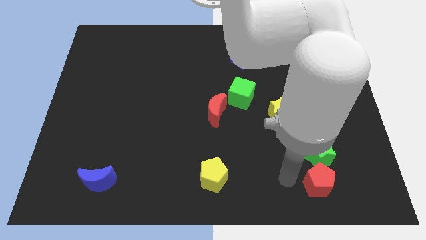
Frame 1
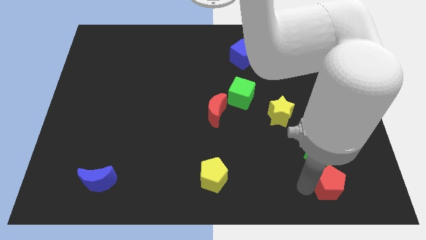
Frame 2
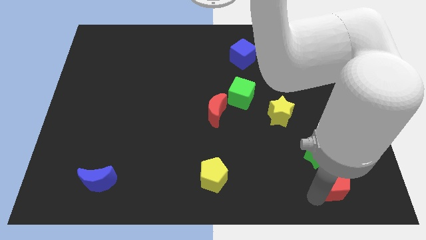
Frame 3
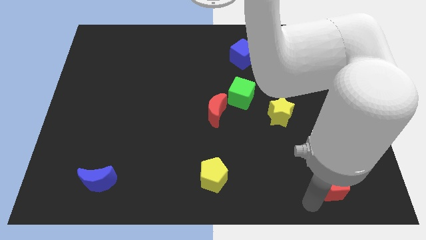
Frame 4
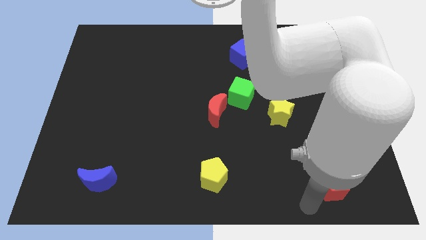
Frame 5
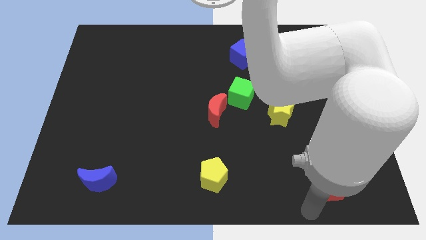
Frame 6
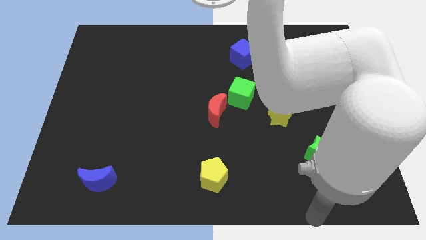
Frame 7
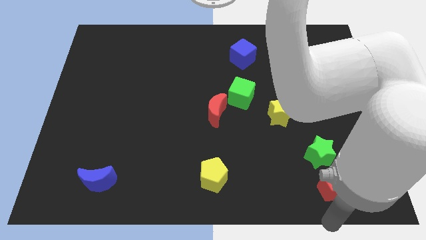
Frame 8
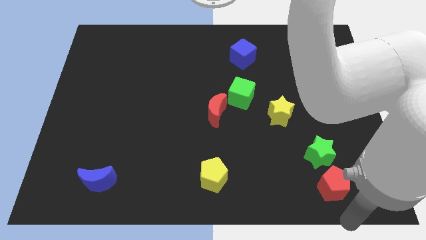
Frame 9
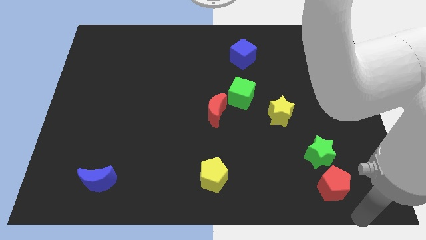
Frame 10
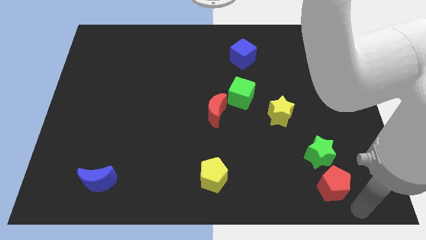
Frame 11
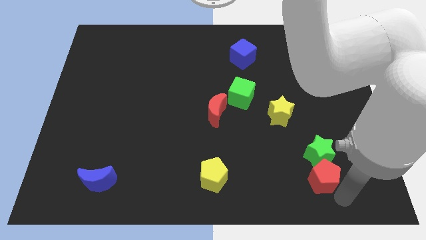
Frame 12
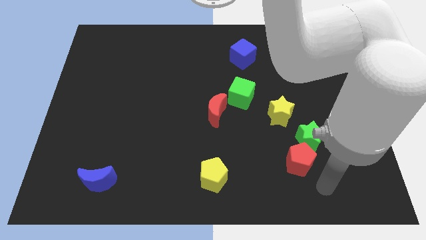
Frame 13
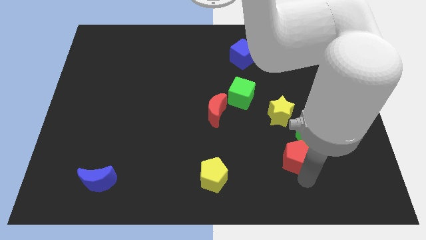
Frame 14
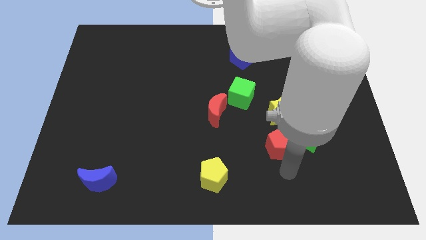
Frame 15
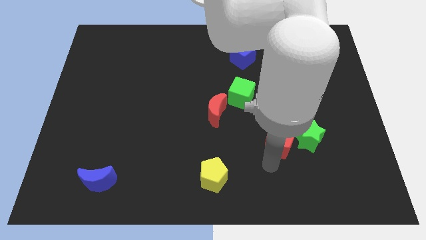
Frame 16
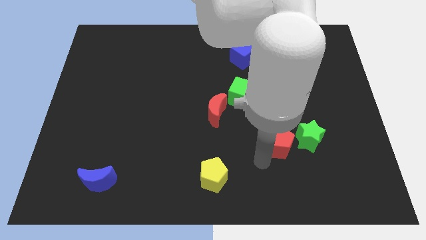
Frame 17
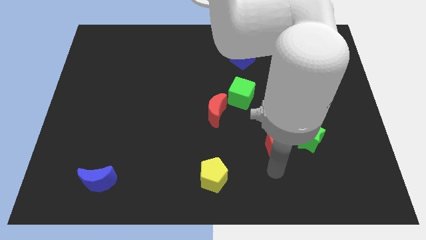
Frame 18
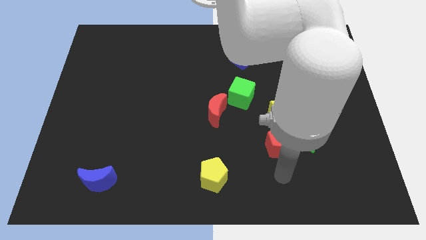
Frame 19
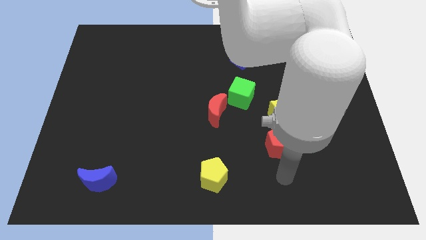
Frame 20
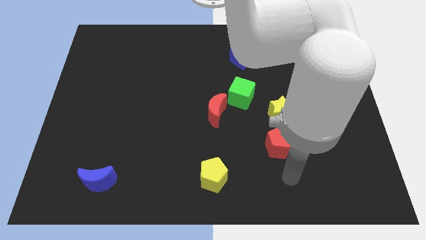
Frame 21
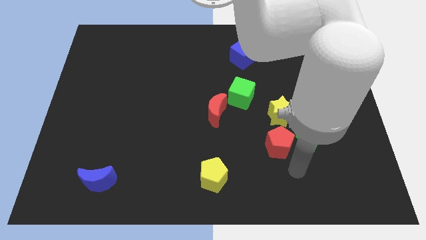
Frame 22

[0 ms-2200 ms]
move the red pentagon to the left side of the yellow star

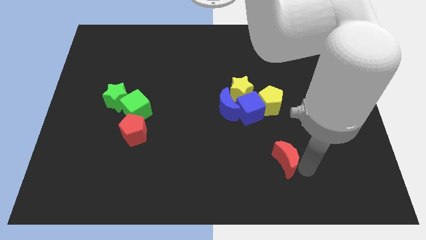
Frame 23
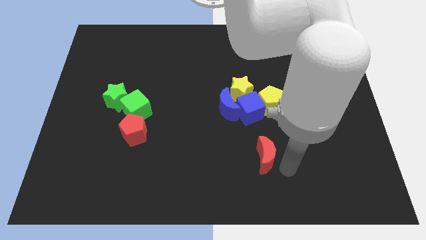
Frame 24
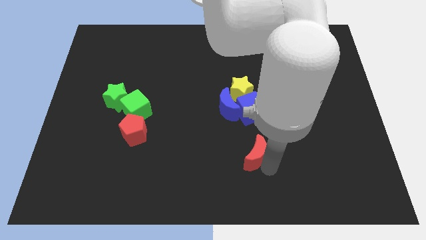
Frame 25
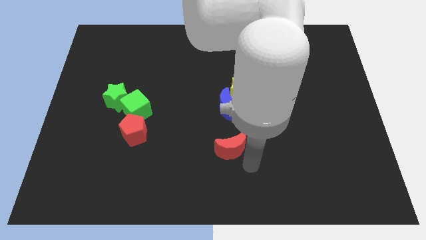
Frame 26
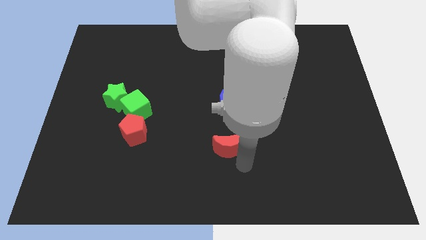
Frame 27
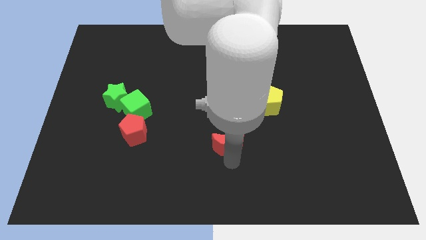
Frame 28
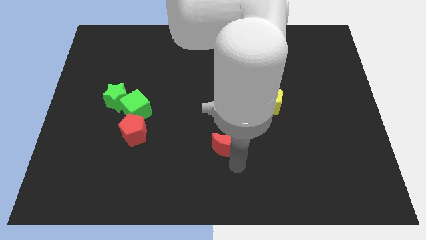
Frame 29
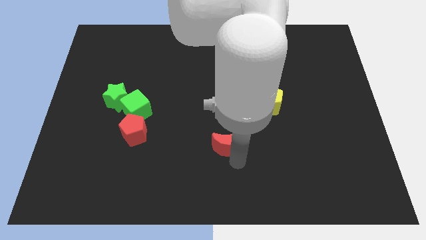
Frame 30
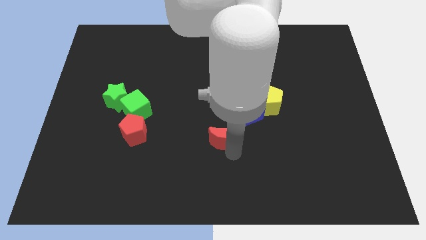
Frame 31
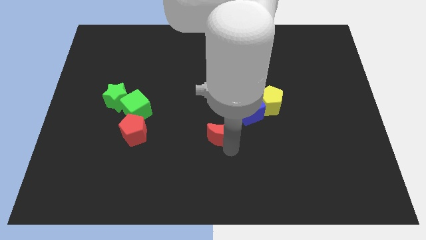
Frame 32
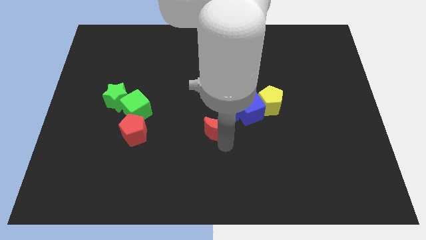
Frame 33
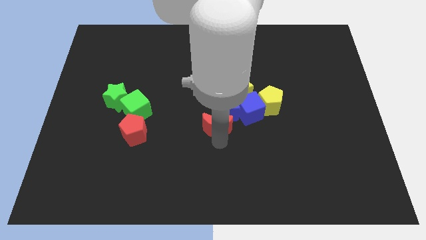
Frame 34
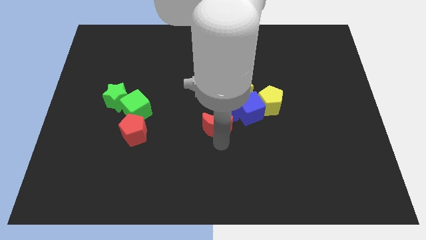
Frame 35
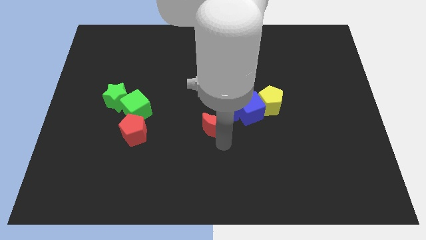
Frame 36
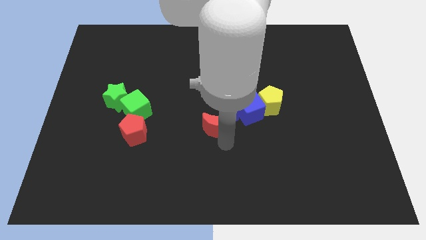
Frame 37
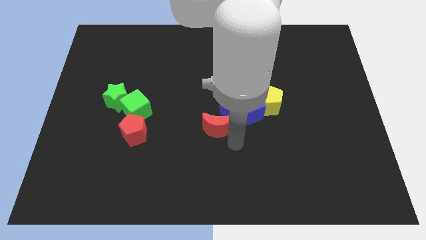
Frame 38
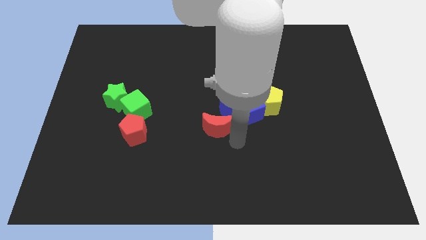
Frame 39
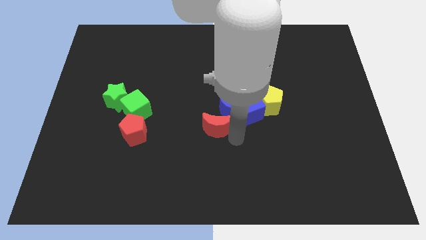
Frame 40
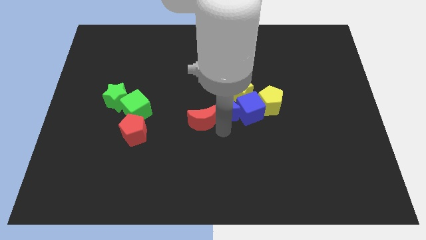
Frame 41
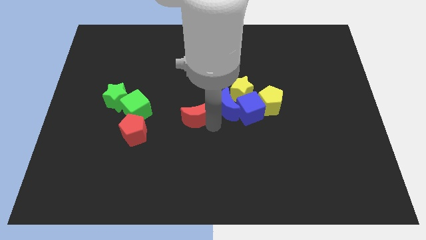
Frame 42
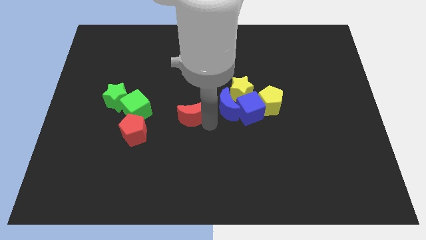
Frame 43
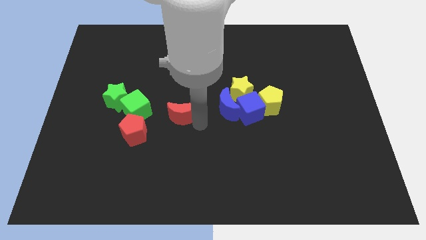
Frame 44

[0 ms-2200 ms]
move the red moon to the right side of the green cube

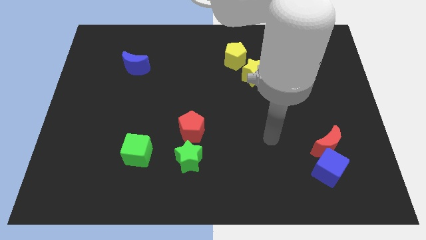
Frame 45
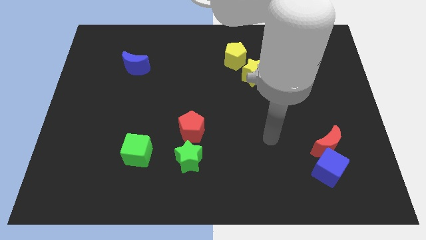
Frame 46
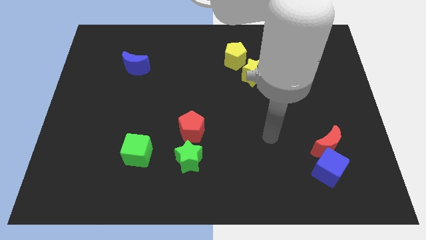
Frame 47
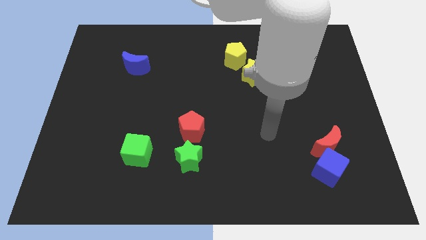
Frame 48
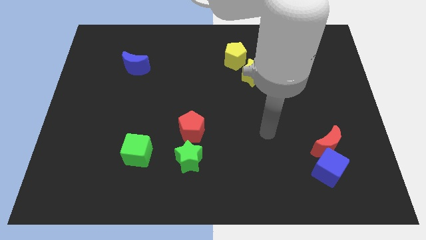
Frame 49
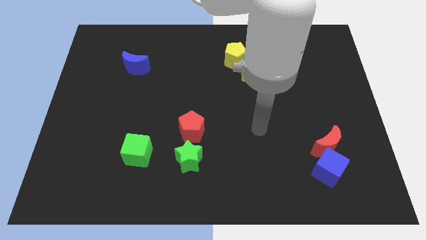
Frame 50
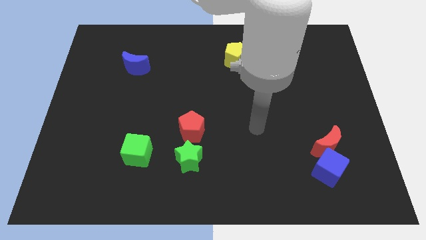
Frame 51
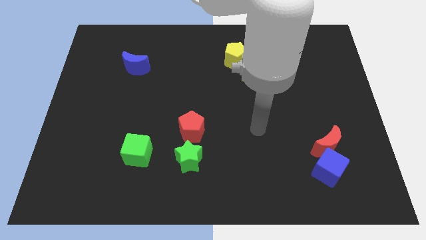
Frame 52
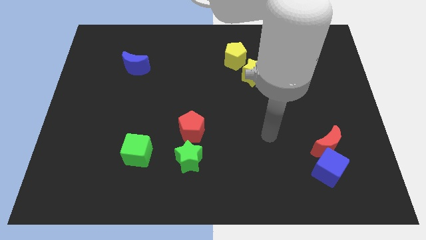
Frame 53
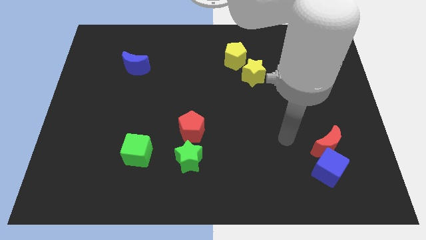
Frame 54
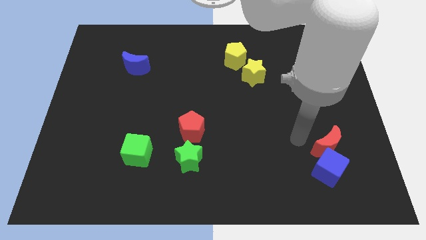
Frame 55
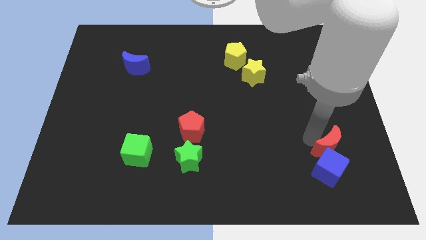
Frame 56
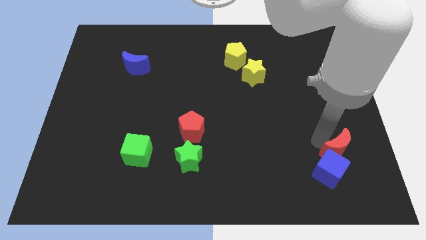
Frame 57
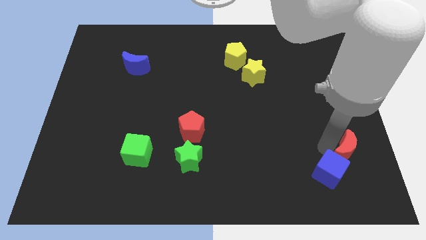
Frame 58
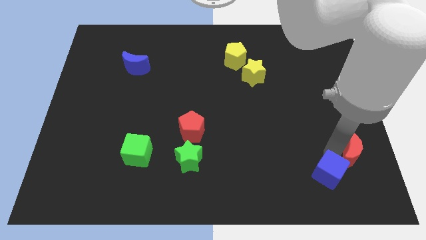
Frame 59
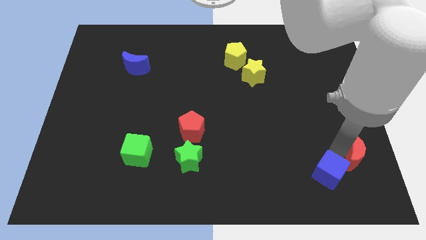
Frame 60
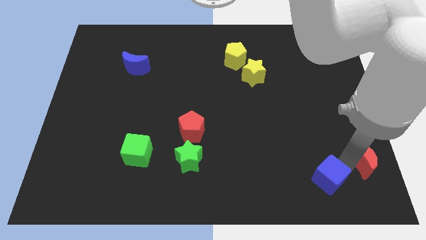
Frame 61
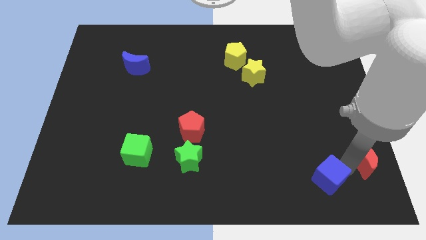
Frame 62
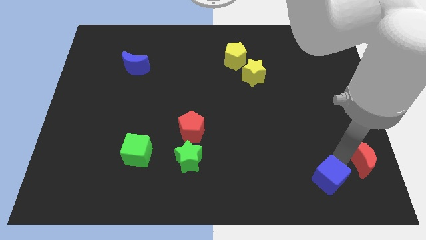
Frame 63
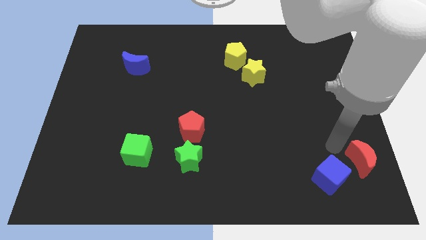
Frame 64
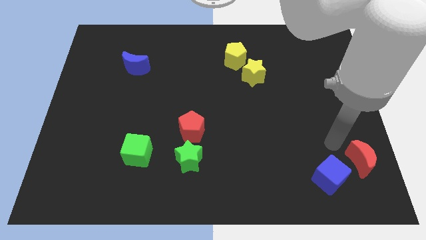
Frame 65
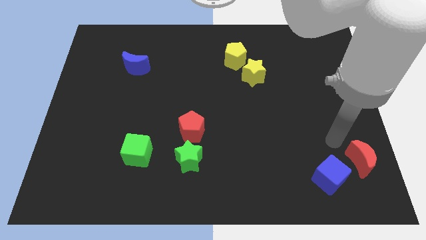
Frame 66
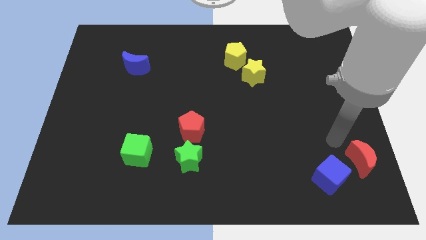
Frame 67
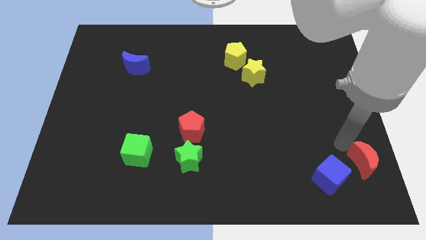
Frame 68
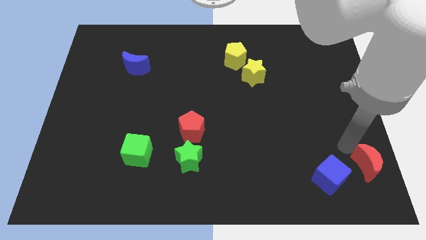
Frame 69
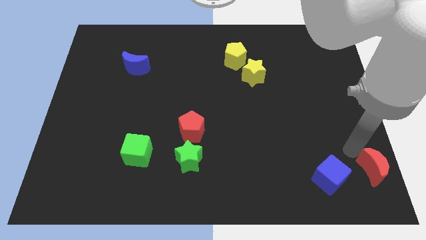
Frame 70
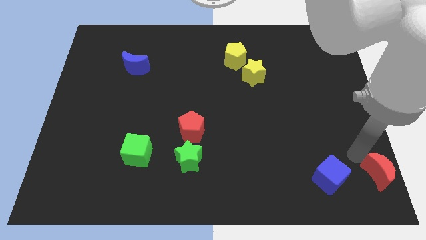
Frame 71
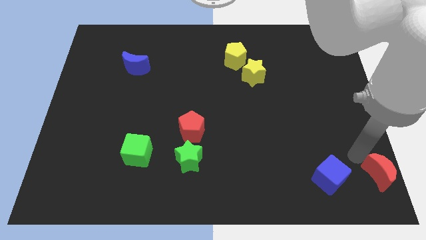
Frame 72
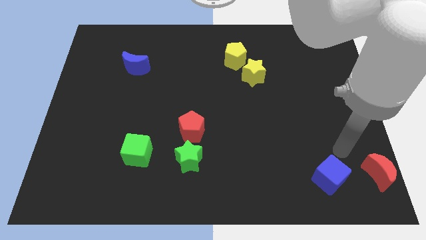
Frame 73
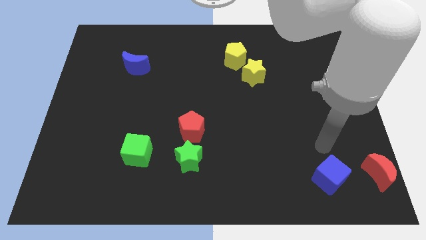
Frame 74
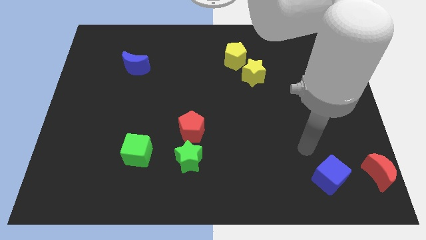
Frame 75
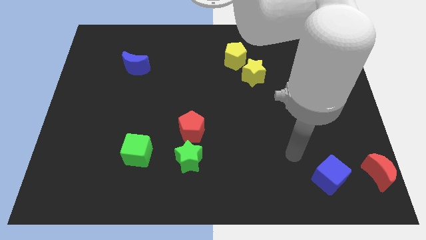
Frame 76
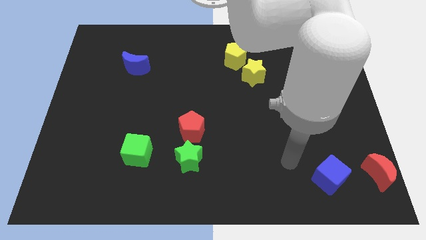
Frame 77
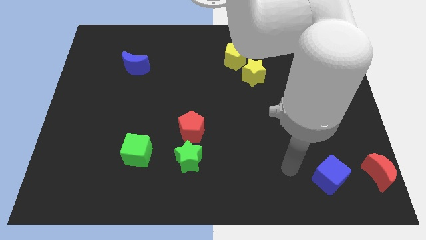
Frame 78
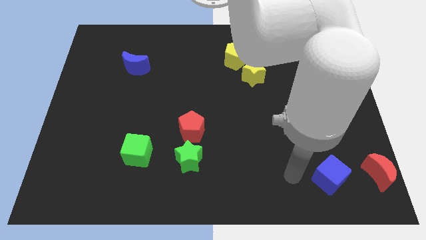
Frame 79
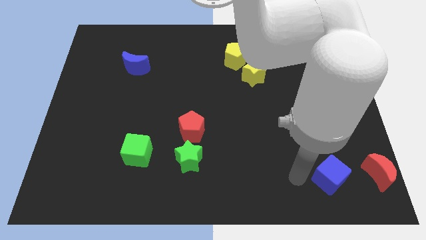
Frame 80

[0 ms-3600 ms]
move the red crescent to the bottom right of the board

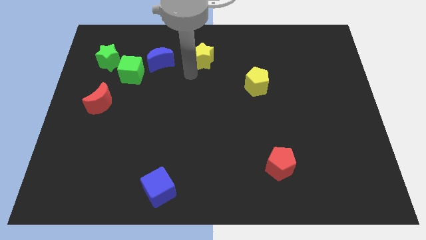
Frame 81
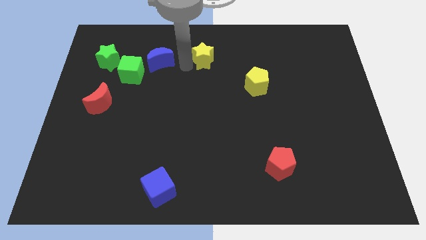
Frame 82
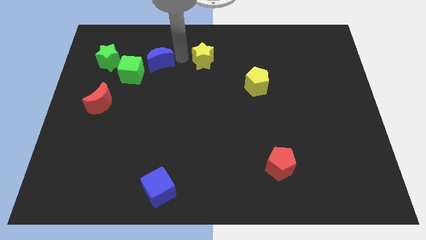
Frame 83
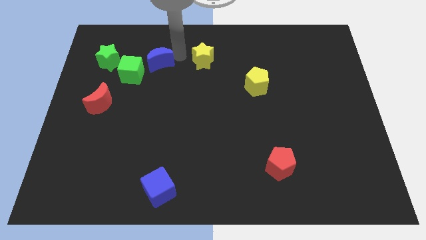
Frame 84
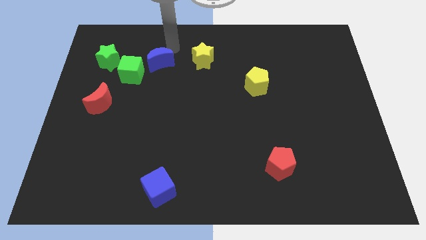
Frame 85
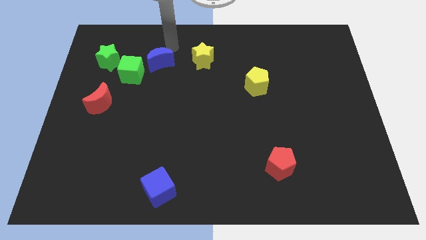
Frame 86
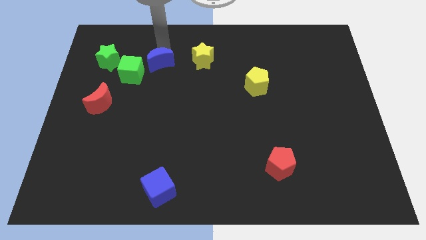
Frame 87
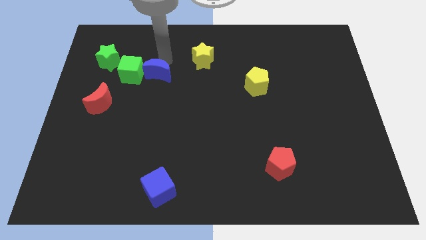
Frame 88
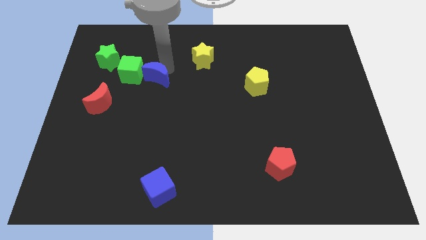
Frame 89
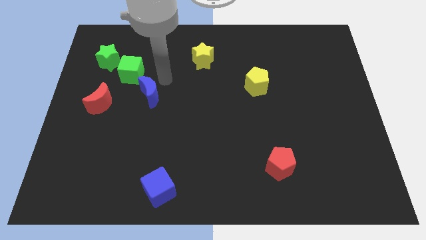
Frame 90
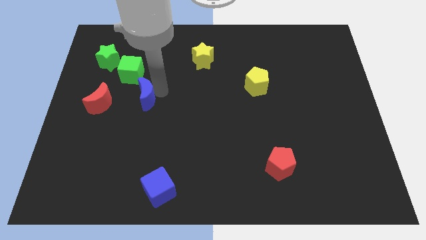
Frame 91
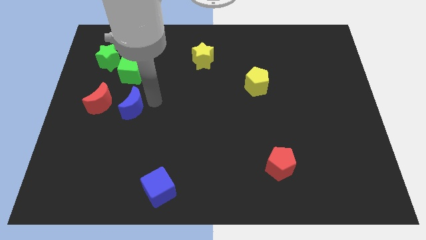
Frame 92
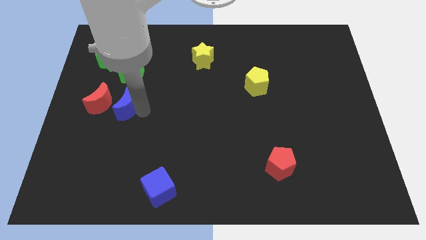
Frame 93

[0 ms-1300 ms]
move the blue crescent to the bottom of the green cube
